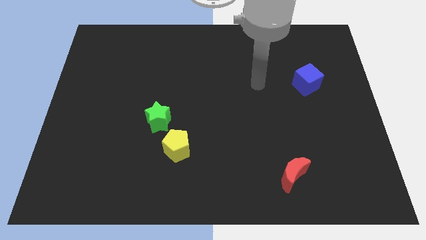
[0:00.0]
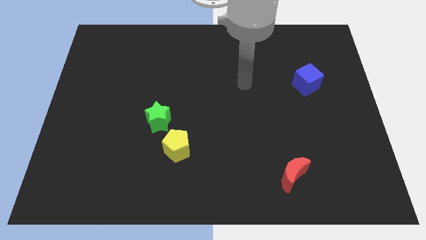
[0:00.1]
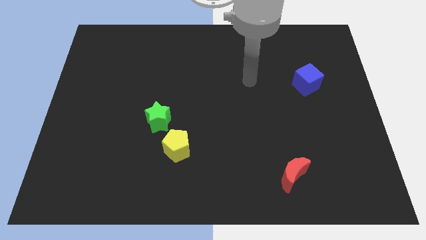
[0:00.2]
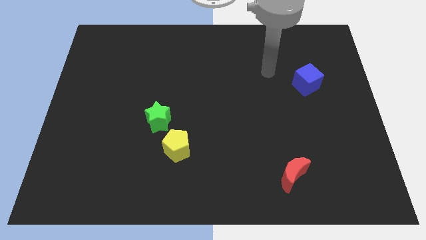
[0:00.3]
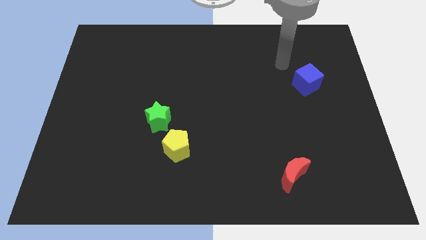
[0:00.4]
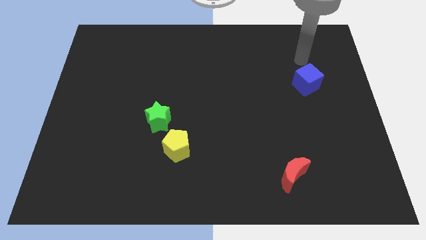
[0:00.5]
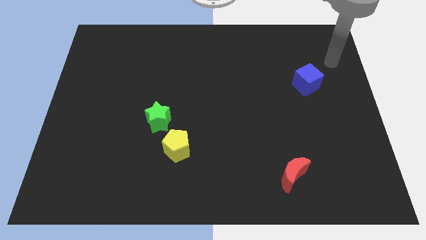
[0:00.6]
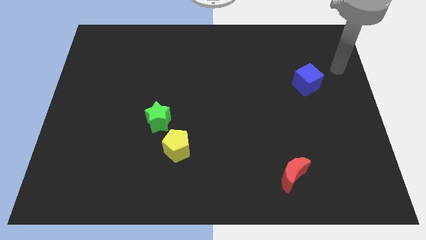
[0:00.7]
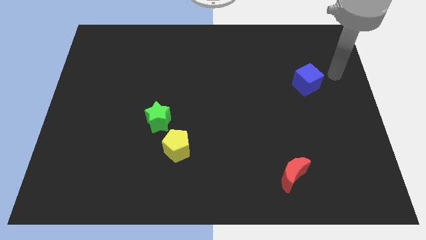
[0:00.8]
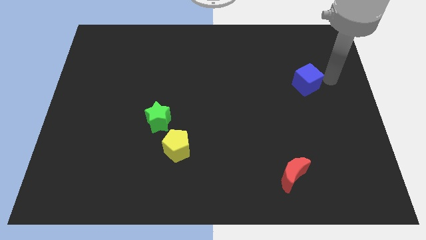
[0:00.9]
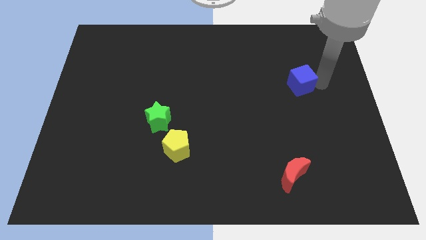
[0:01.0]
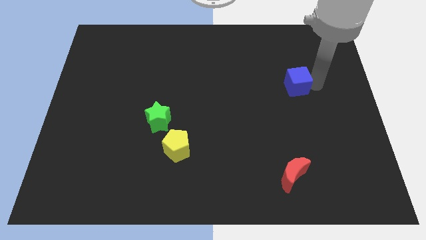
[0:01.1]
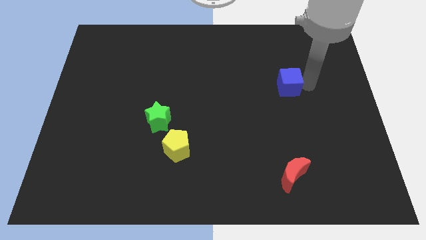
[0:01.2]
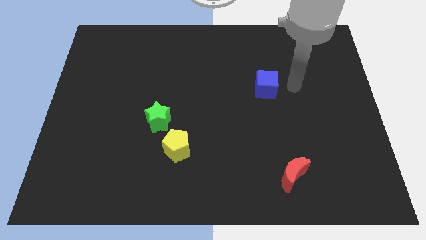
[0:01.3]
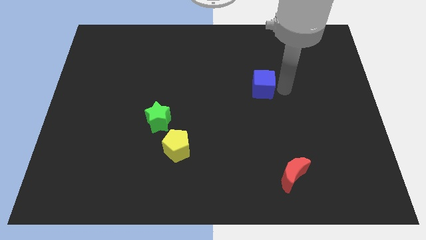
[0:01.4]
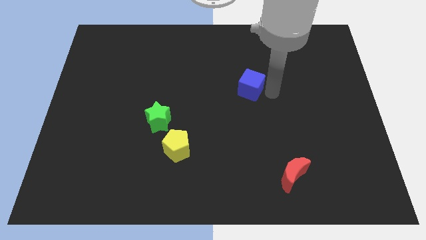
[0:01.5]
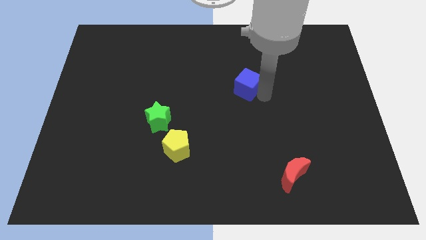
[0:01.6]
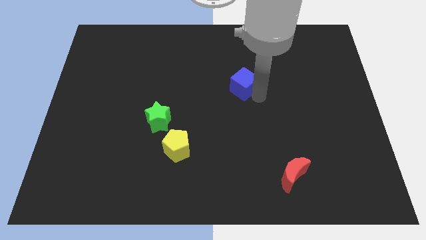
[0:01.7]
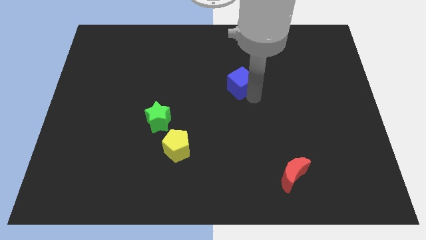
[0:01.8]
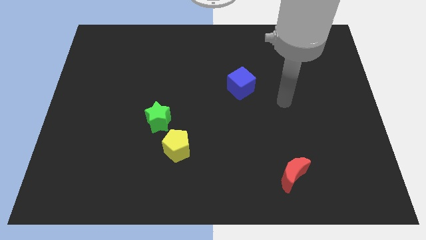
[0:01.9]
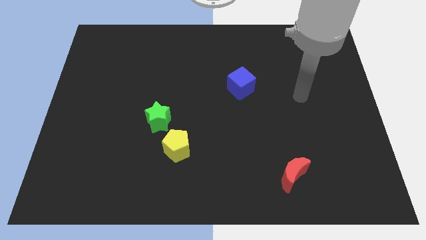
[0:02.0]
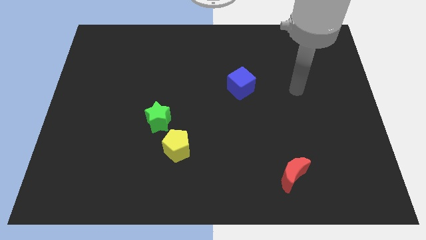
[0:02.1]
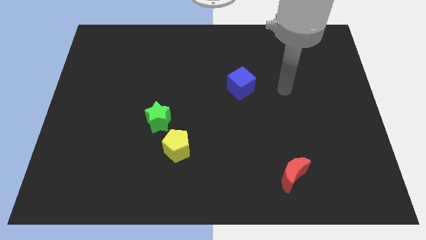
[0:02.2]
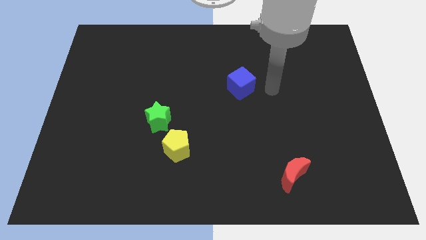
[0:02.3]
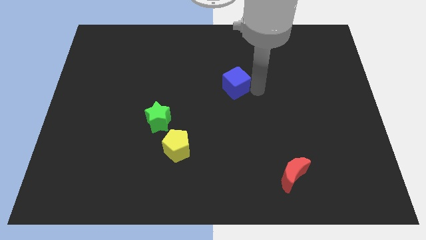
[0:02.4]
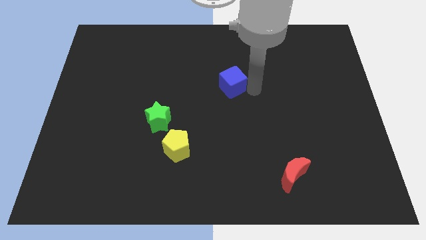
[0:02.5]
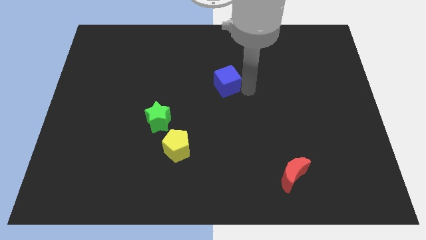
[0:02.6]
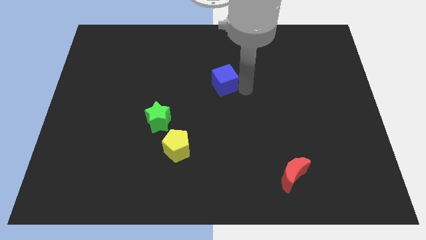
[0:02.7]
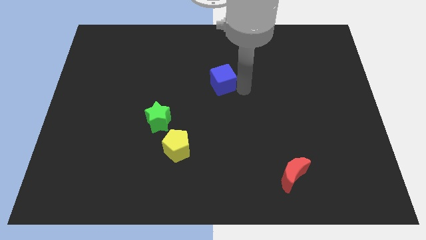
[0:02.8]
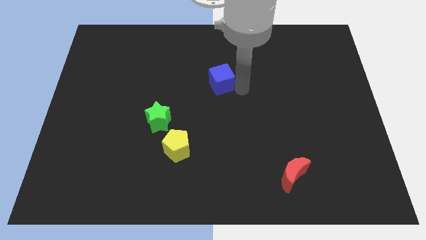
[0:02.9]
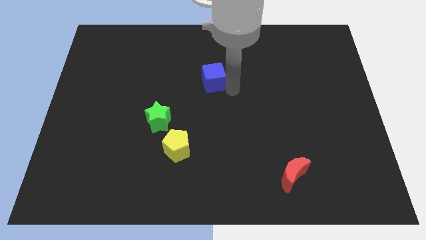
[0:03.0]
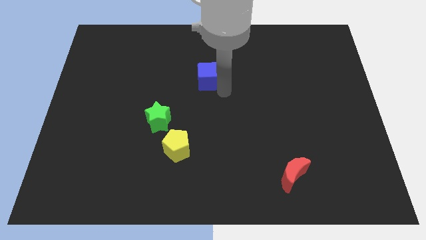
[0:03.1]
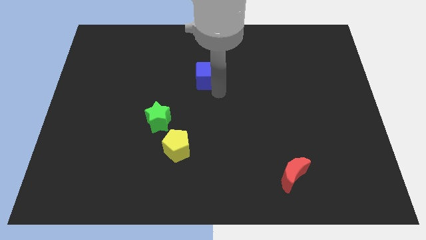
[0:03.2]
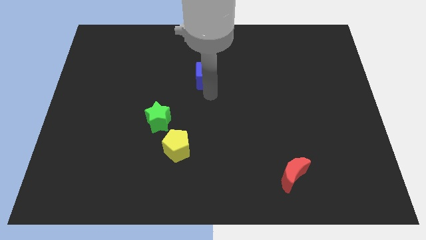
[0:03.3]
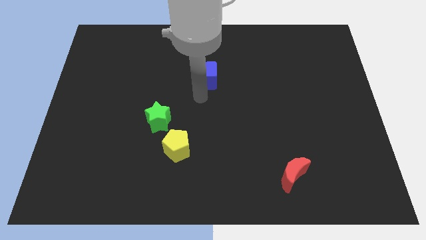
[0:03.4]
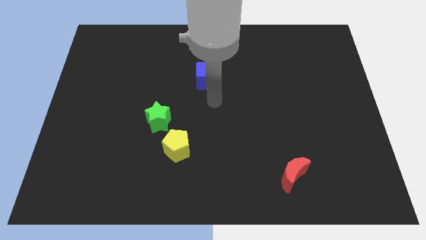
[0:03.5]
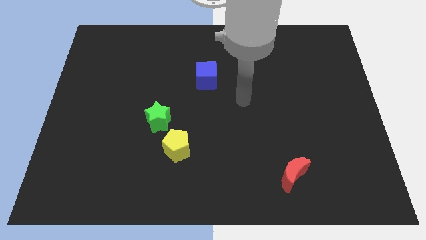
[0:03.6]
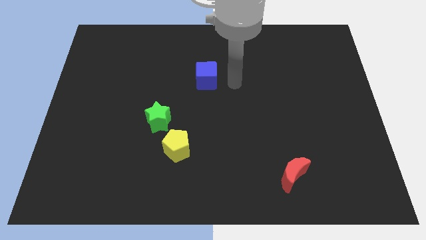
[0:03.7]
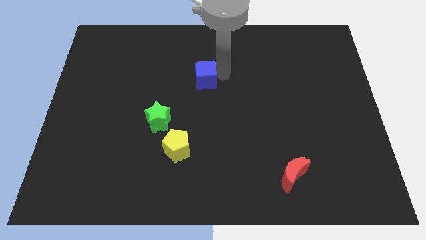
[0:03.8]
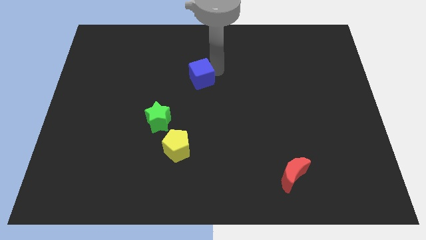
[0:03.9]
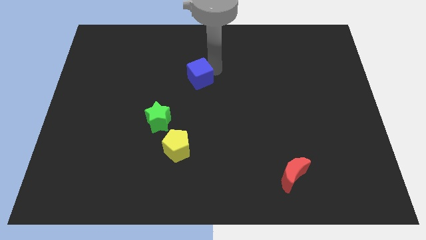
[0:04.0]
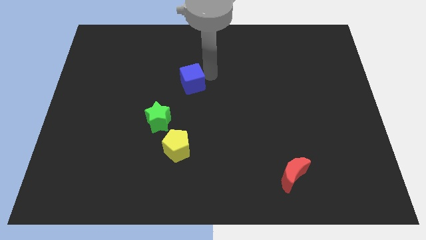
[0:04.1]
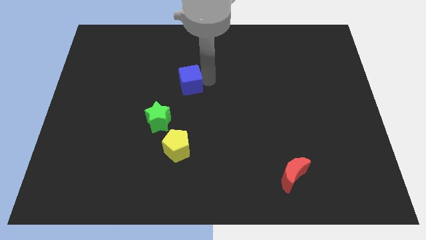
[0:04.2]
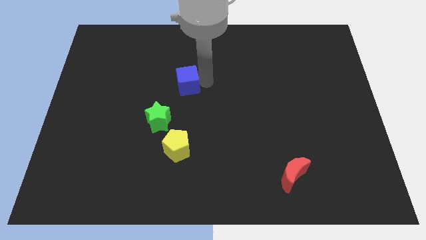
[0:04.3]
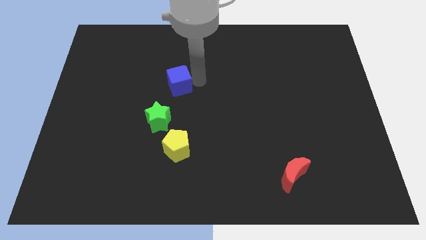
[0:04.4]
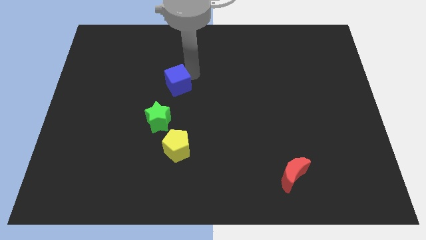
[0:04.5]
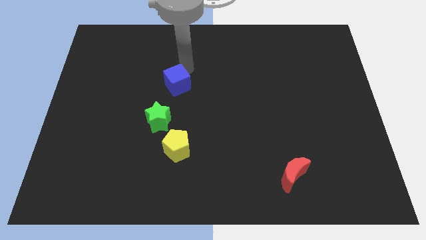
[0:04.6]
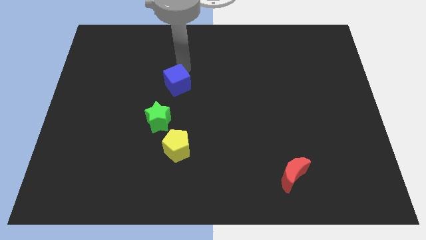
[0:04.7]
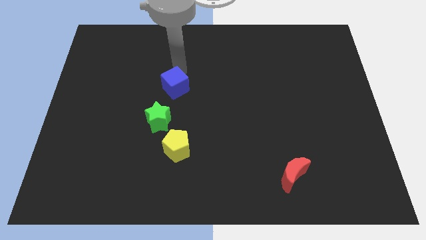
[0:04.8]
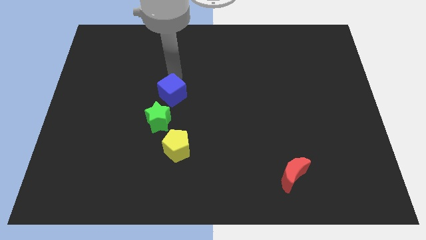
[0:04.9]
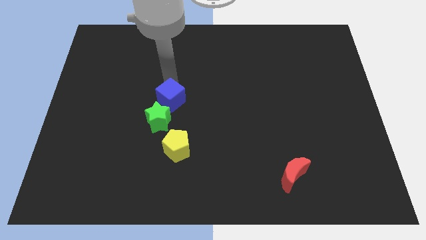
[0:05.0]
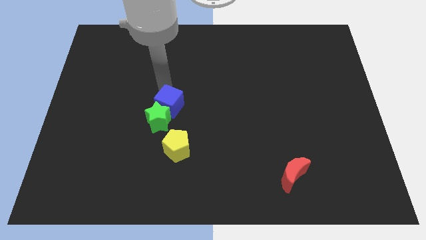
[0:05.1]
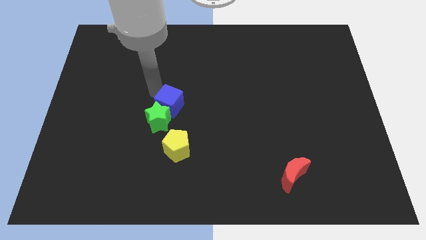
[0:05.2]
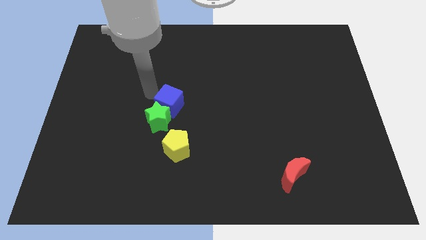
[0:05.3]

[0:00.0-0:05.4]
push the blue cube close to the green star

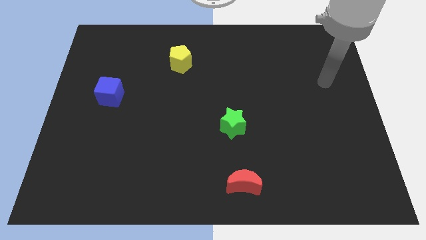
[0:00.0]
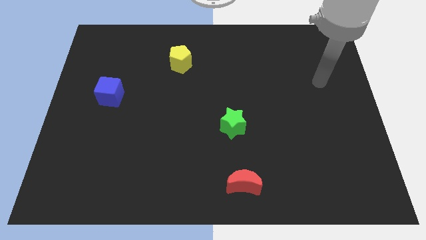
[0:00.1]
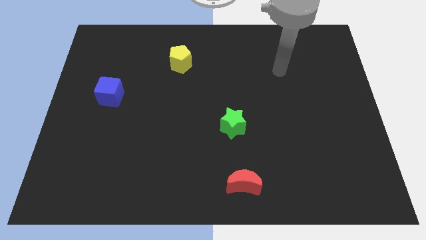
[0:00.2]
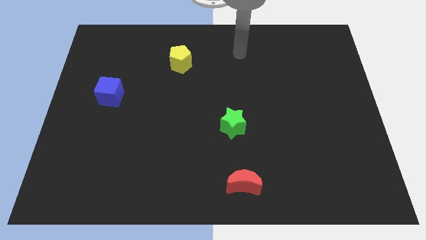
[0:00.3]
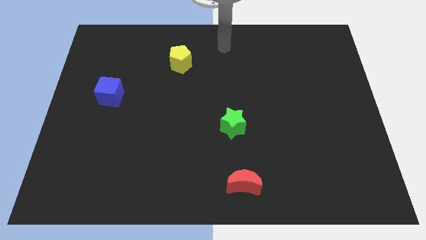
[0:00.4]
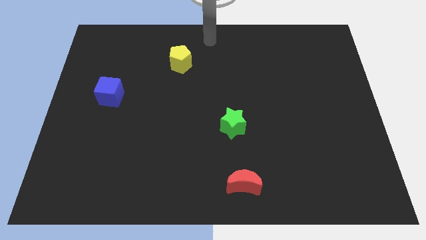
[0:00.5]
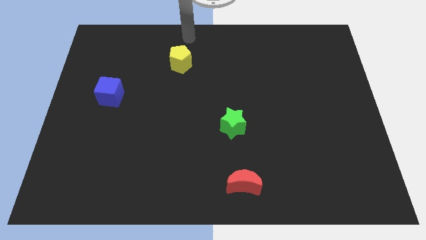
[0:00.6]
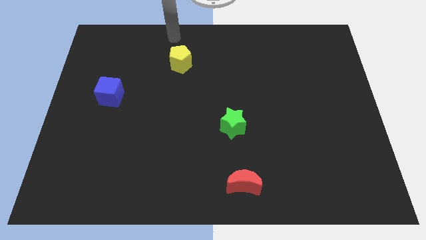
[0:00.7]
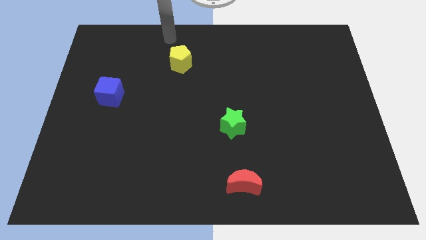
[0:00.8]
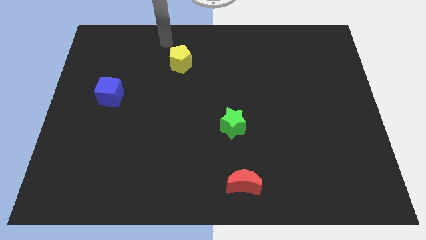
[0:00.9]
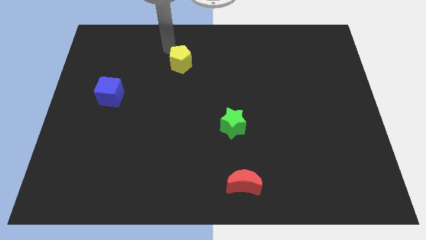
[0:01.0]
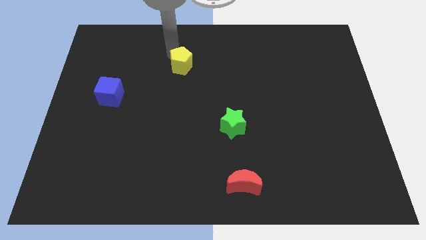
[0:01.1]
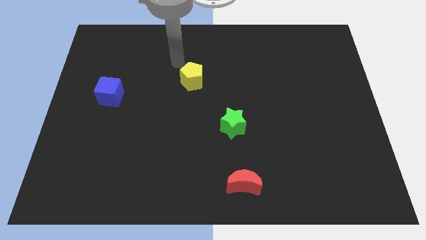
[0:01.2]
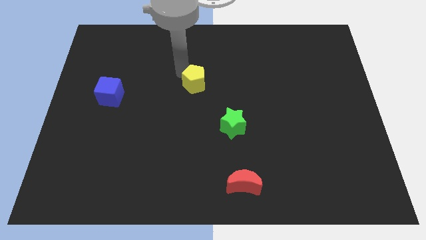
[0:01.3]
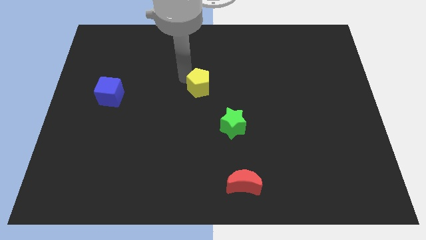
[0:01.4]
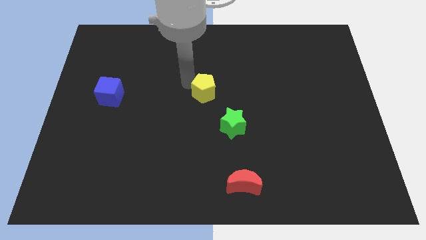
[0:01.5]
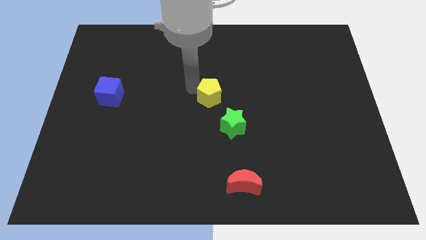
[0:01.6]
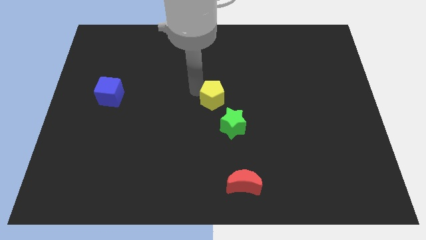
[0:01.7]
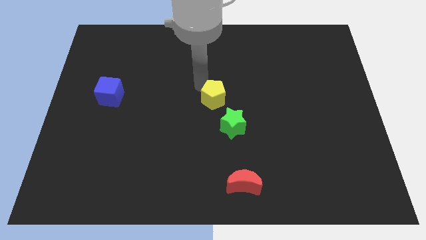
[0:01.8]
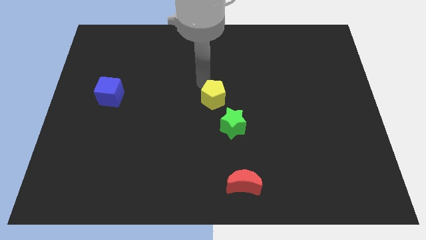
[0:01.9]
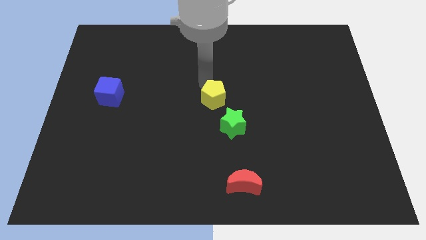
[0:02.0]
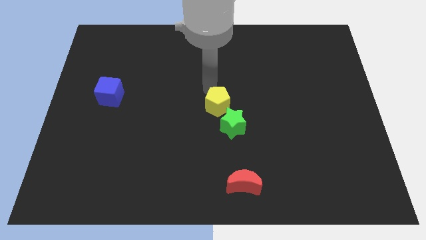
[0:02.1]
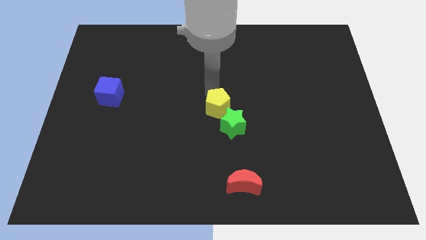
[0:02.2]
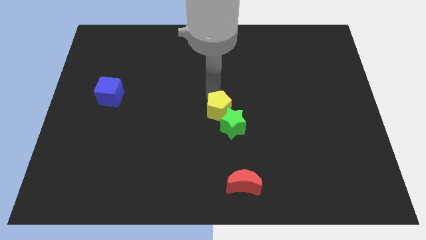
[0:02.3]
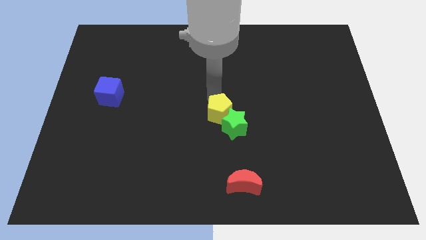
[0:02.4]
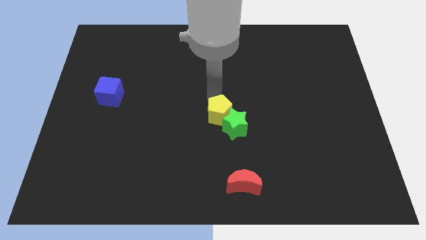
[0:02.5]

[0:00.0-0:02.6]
push the yellow block close to the star

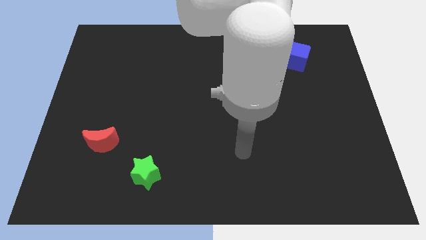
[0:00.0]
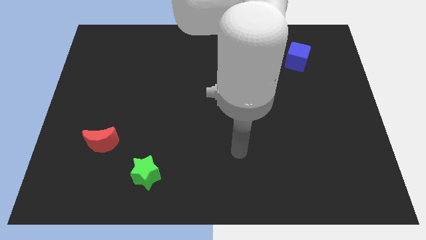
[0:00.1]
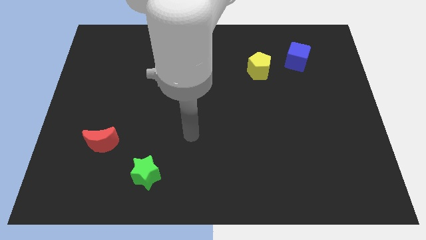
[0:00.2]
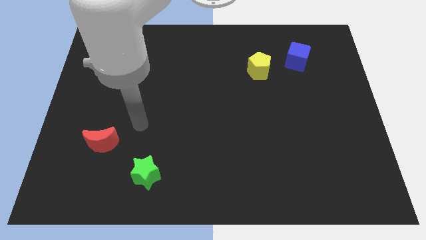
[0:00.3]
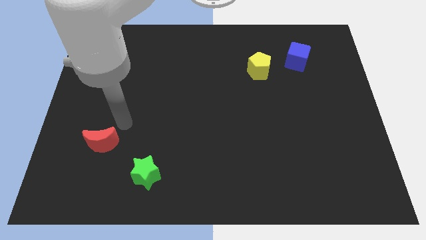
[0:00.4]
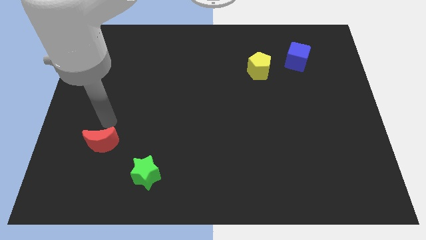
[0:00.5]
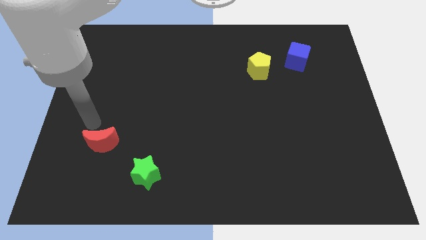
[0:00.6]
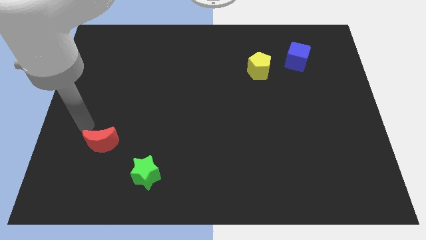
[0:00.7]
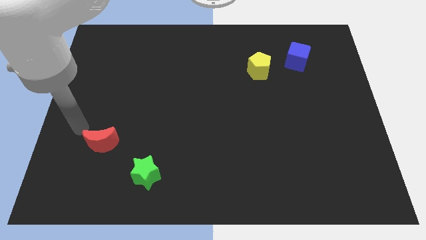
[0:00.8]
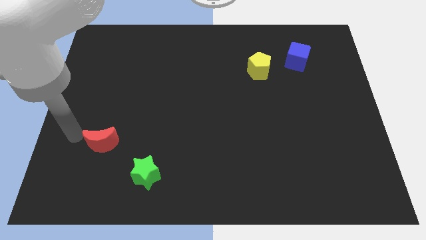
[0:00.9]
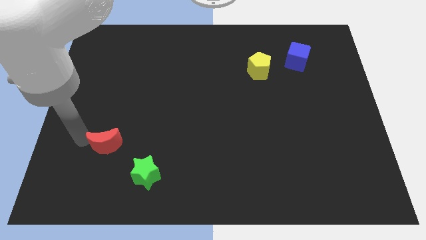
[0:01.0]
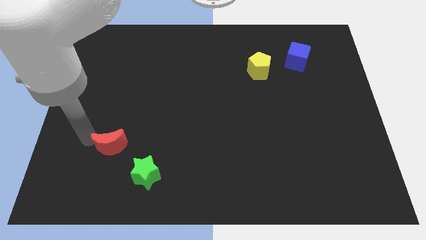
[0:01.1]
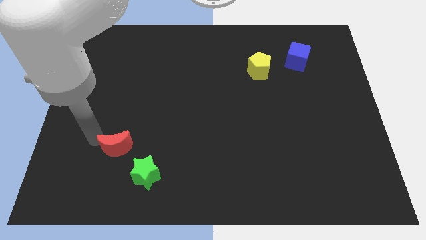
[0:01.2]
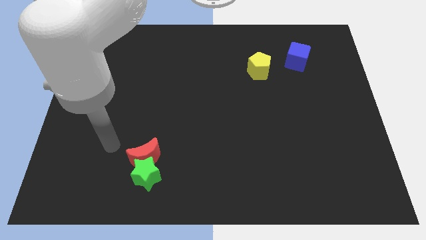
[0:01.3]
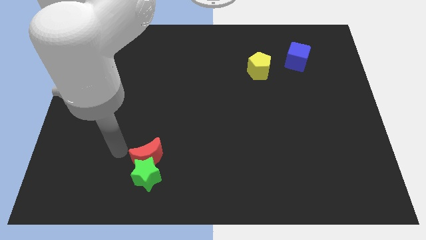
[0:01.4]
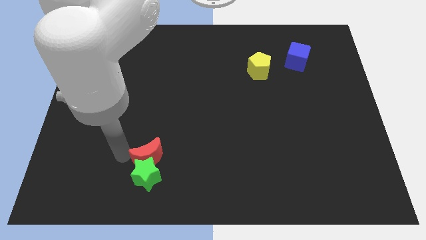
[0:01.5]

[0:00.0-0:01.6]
push the red block next to the star
